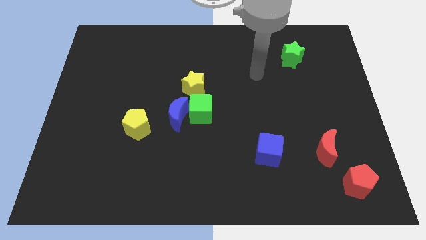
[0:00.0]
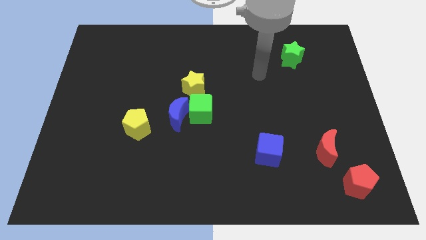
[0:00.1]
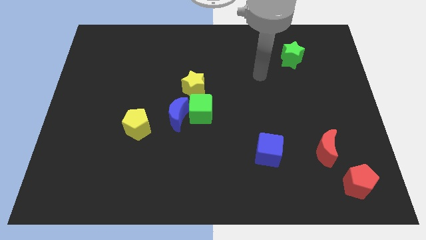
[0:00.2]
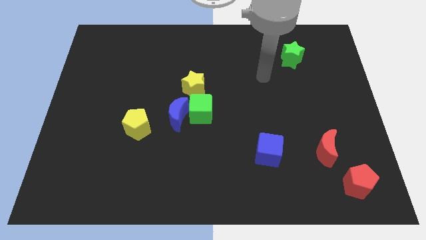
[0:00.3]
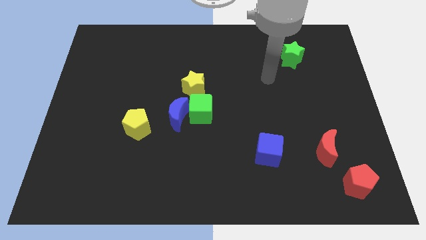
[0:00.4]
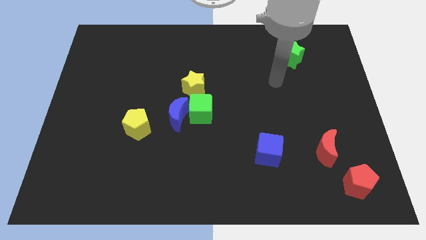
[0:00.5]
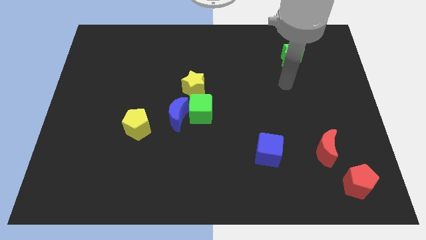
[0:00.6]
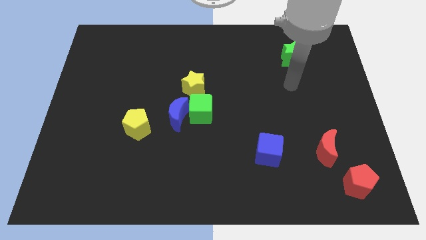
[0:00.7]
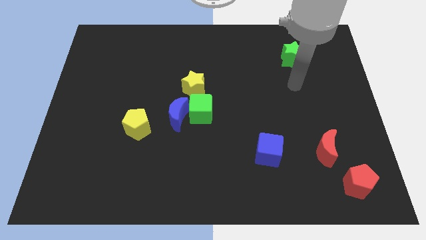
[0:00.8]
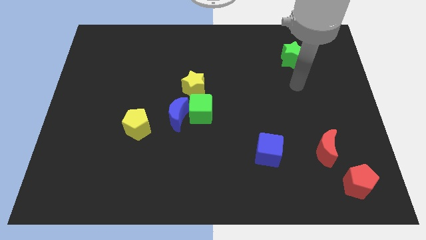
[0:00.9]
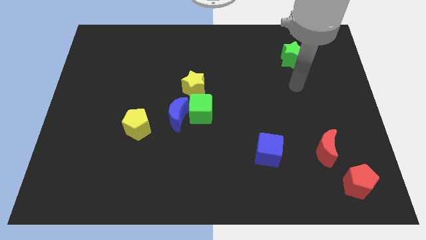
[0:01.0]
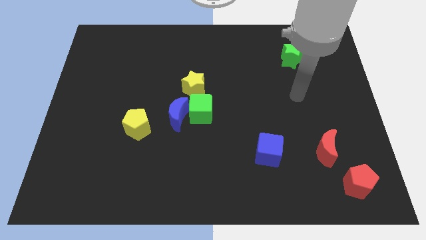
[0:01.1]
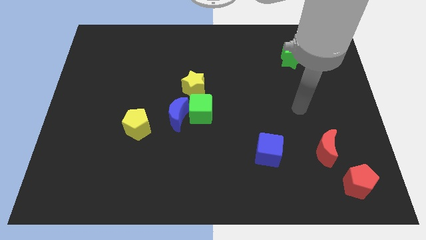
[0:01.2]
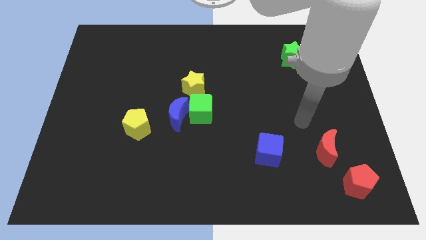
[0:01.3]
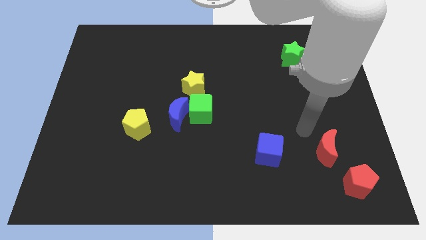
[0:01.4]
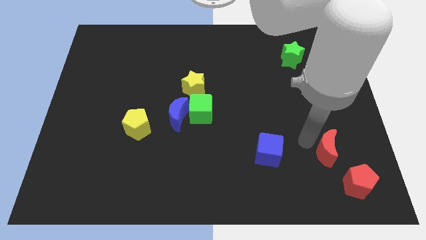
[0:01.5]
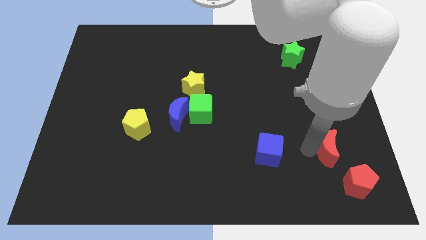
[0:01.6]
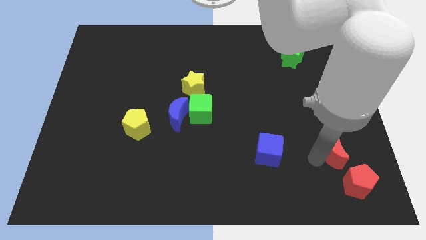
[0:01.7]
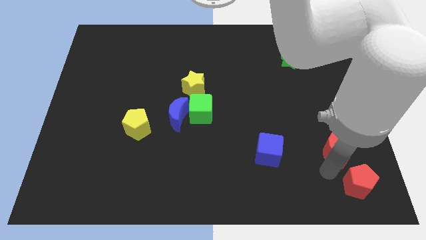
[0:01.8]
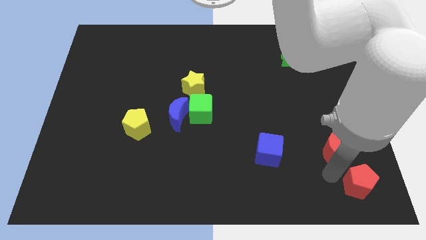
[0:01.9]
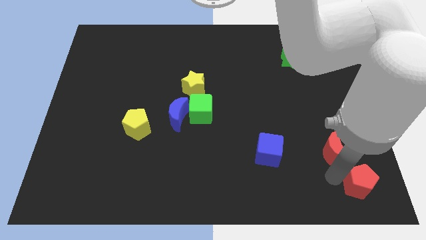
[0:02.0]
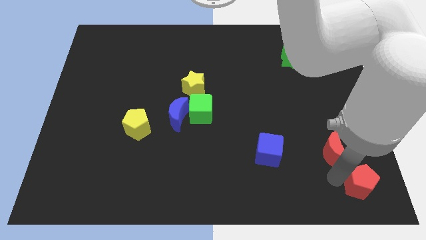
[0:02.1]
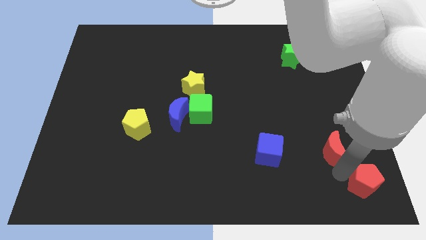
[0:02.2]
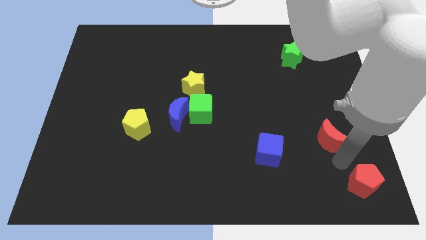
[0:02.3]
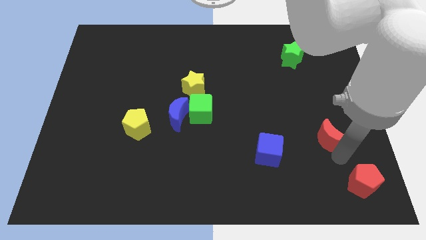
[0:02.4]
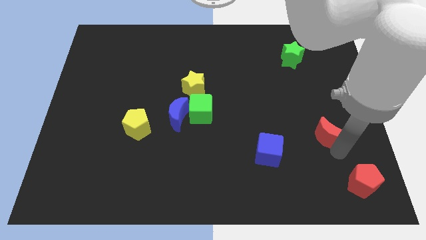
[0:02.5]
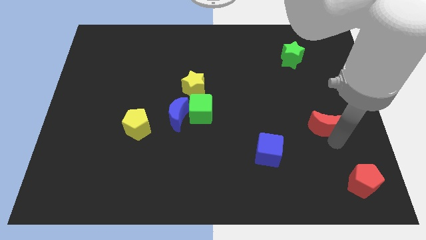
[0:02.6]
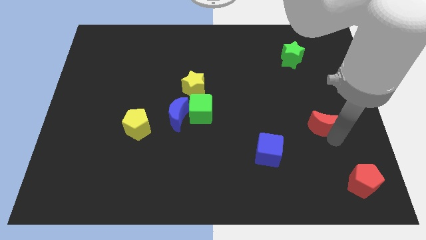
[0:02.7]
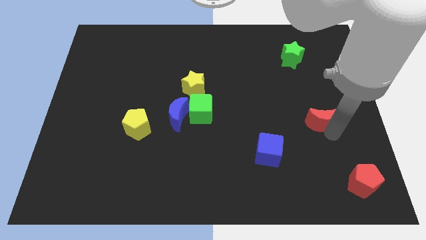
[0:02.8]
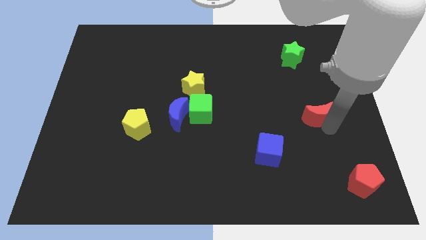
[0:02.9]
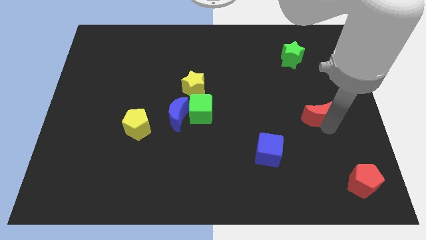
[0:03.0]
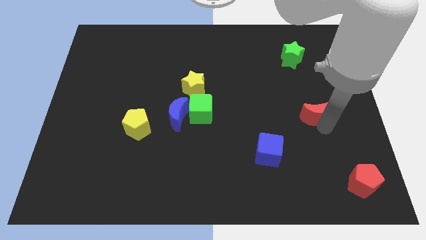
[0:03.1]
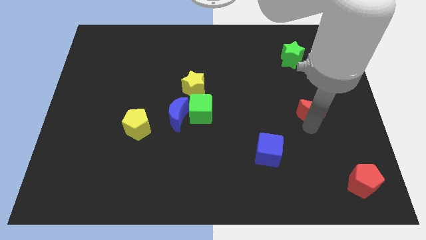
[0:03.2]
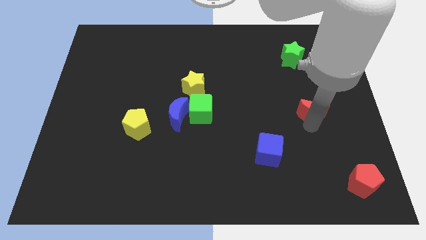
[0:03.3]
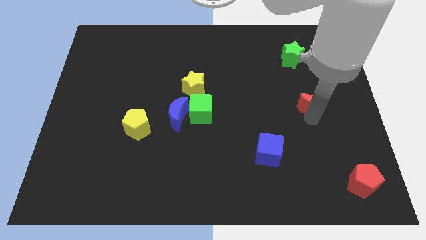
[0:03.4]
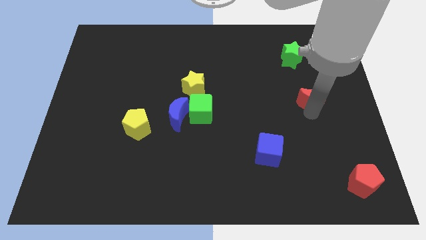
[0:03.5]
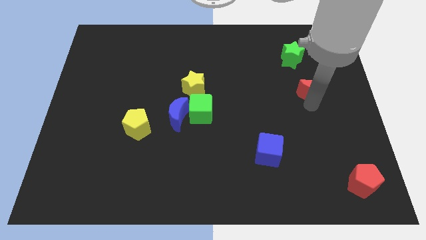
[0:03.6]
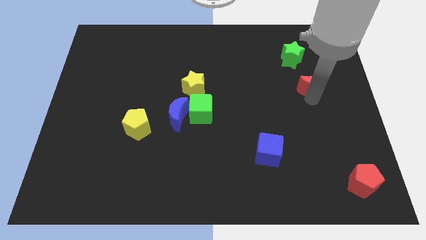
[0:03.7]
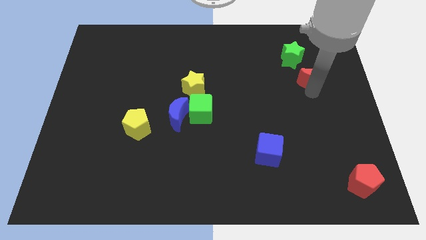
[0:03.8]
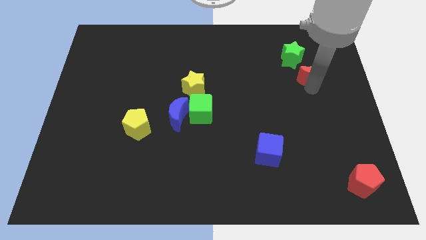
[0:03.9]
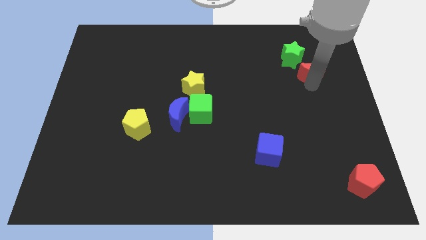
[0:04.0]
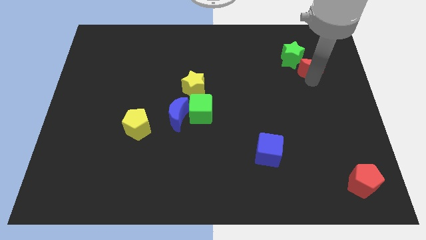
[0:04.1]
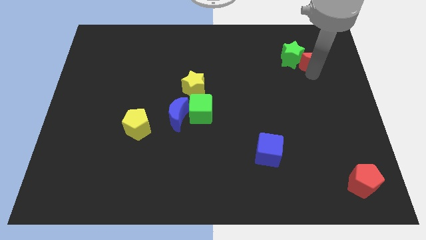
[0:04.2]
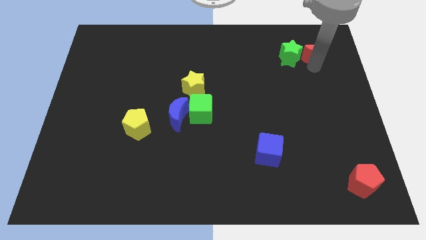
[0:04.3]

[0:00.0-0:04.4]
place the red crescent to the right of the green star

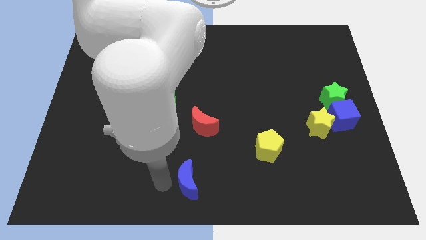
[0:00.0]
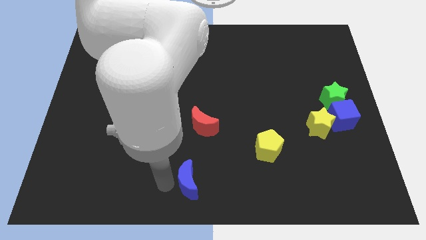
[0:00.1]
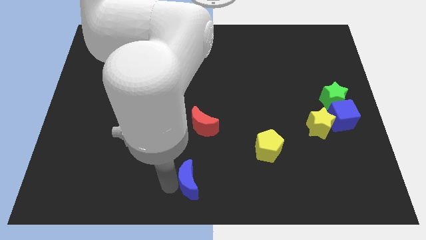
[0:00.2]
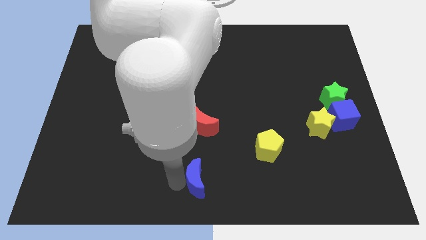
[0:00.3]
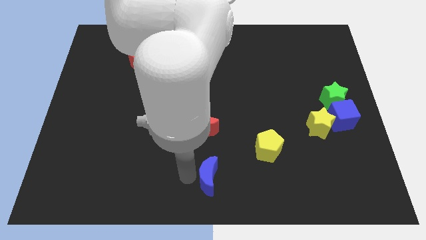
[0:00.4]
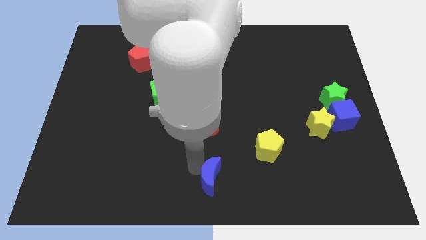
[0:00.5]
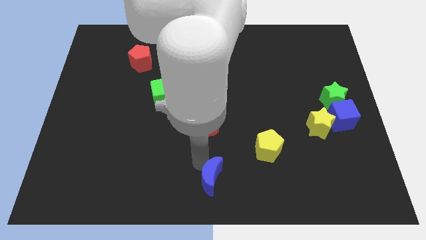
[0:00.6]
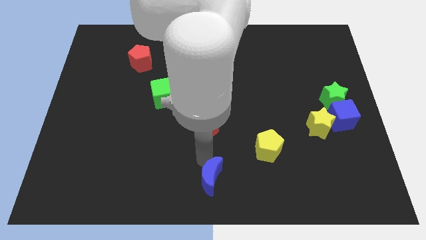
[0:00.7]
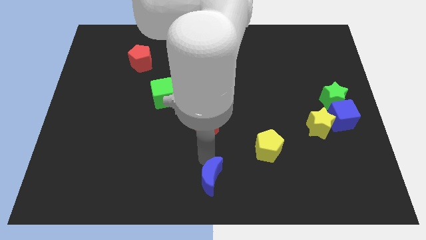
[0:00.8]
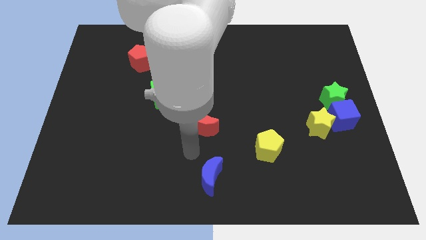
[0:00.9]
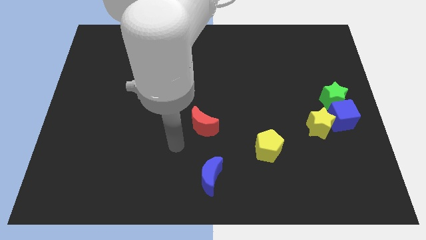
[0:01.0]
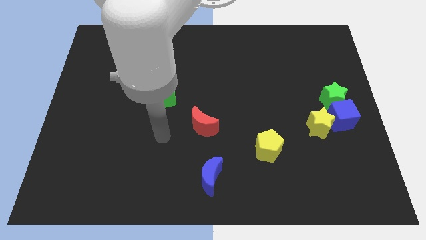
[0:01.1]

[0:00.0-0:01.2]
push the blue crescent towards the right side of the board

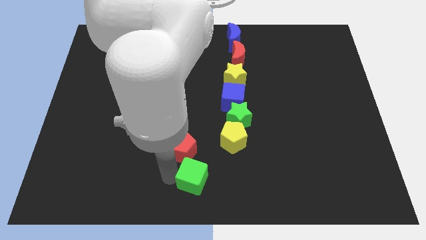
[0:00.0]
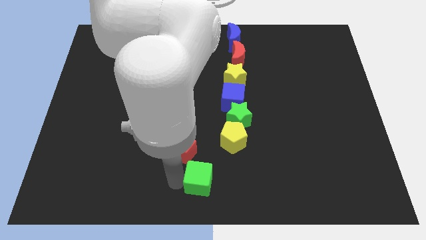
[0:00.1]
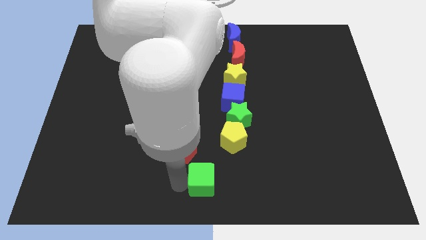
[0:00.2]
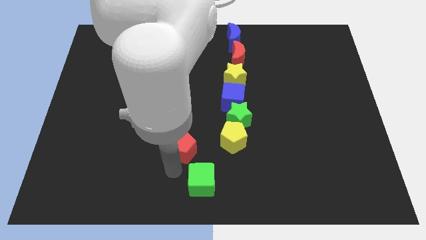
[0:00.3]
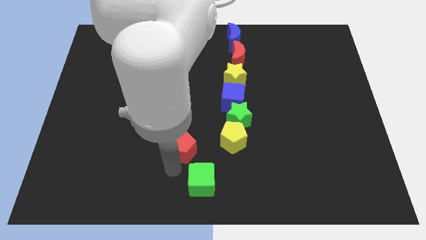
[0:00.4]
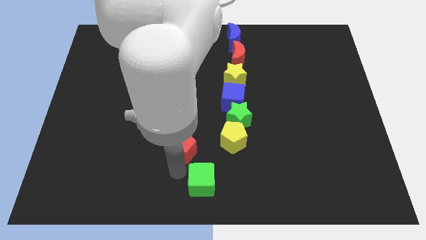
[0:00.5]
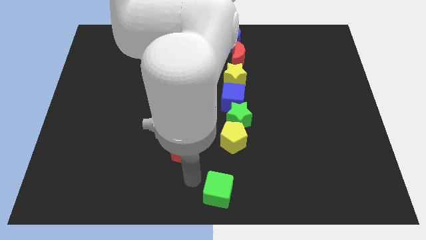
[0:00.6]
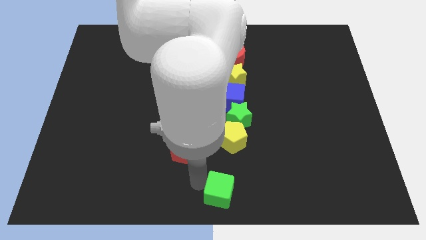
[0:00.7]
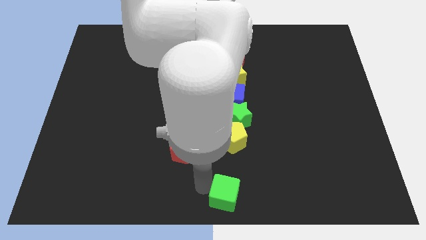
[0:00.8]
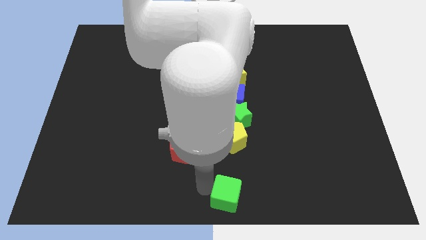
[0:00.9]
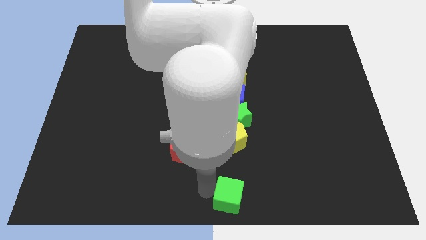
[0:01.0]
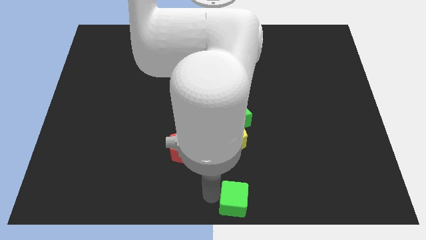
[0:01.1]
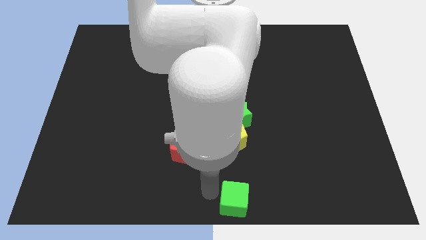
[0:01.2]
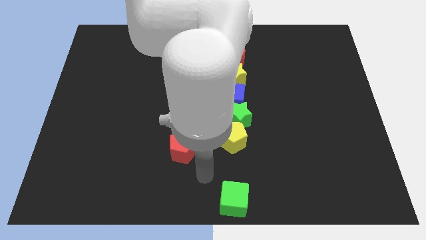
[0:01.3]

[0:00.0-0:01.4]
place the green cube to the bottom to the yellow pentagon

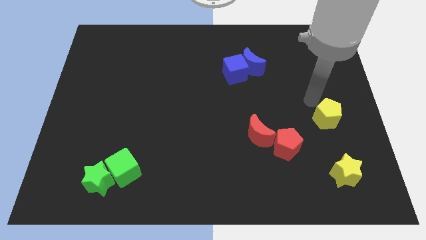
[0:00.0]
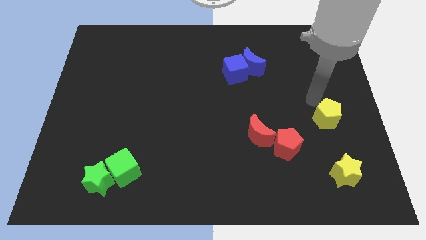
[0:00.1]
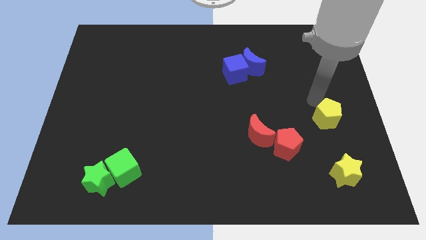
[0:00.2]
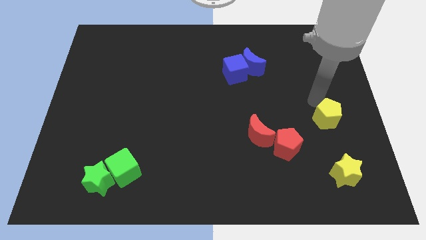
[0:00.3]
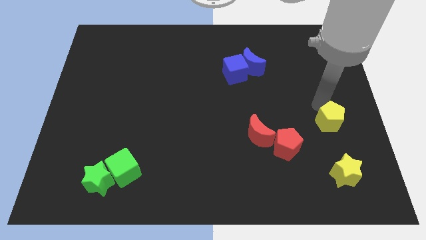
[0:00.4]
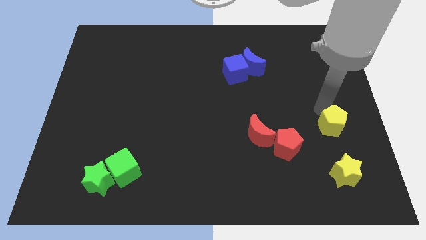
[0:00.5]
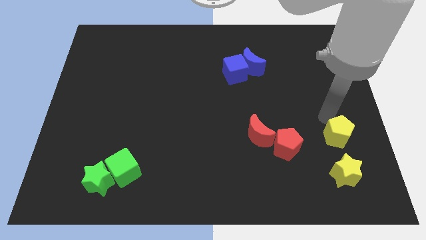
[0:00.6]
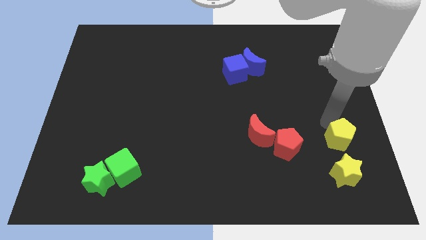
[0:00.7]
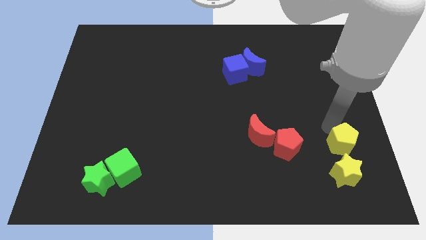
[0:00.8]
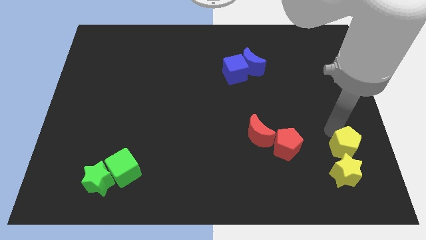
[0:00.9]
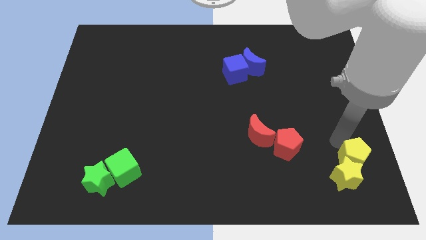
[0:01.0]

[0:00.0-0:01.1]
move the yellow pentagon into the top side of the yellow star

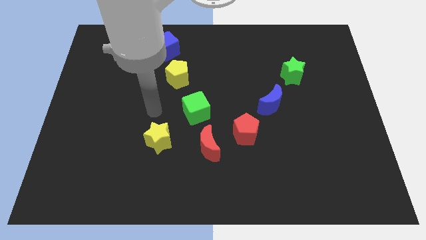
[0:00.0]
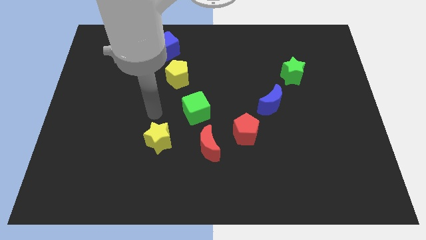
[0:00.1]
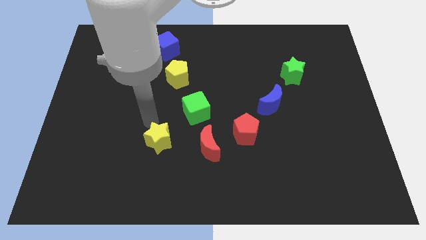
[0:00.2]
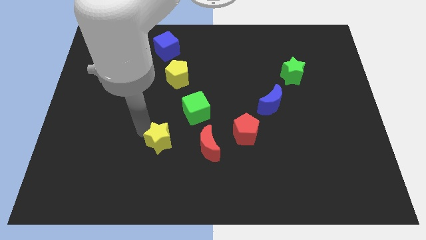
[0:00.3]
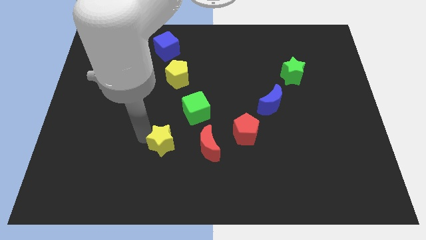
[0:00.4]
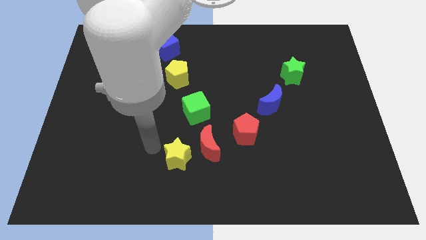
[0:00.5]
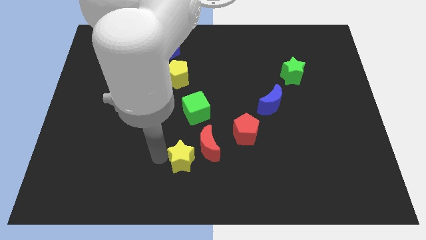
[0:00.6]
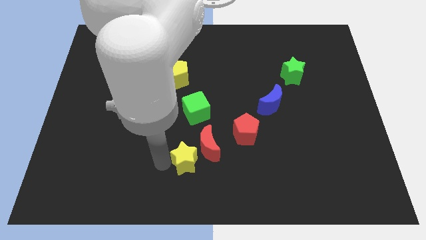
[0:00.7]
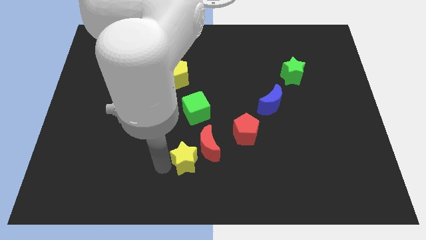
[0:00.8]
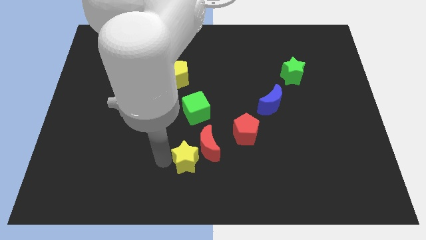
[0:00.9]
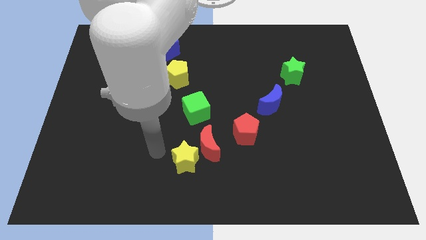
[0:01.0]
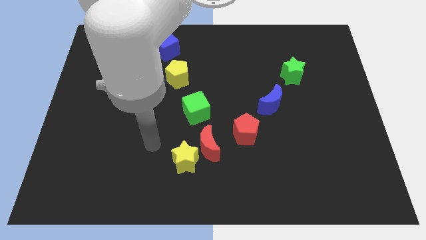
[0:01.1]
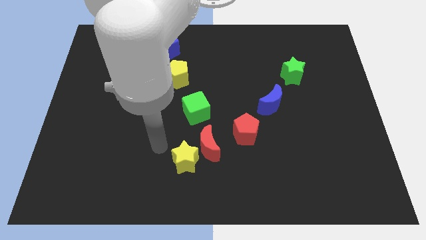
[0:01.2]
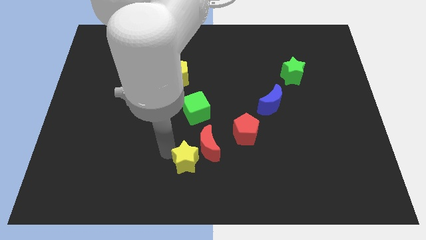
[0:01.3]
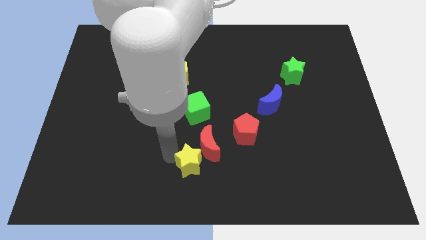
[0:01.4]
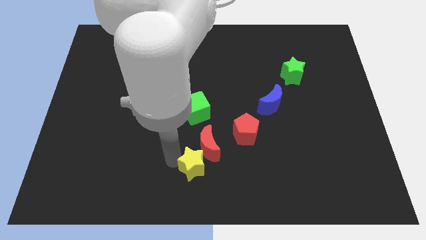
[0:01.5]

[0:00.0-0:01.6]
place yellow star to the left side of red moon
